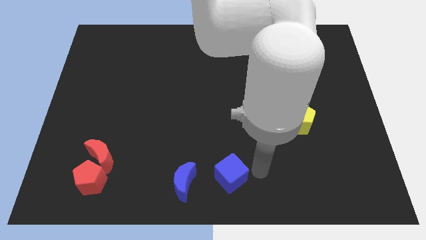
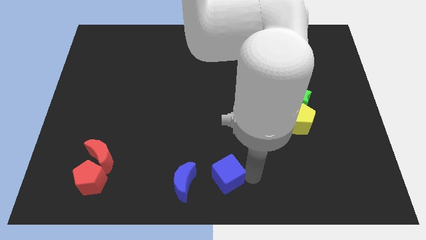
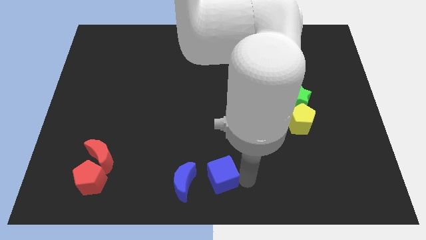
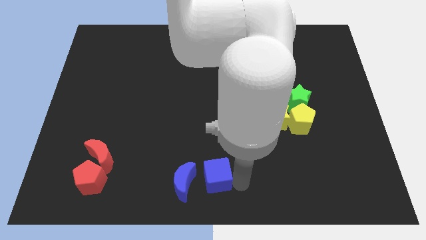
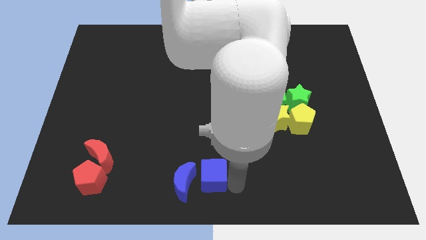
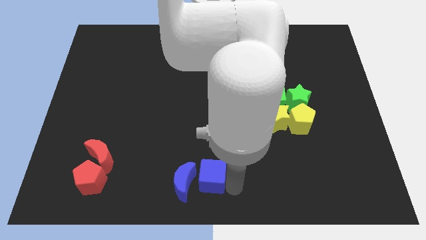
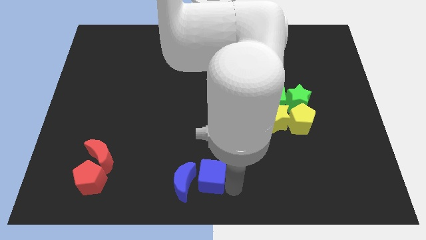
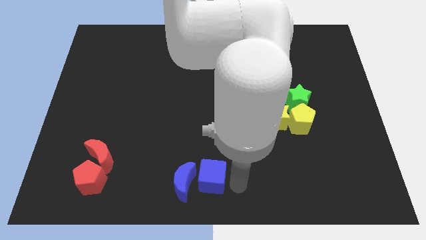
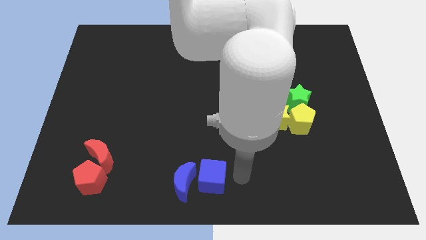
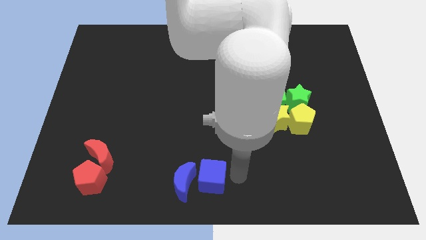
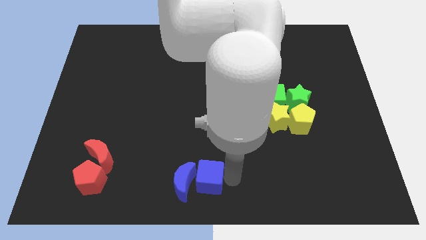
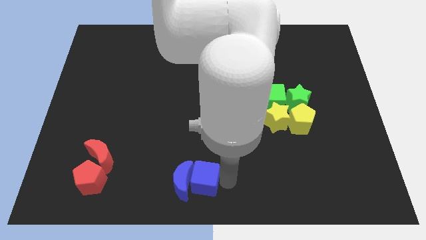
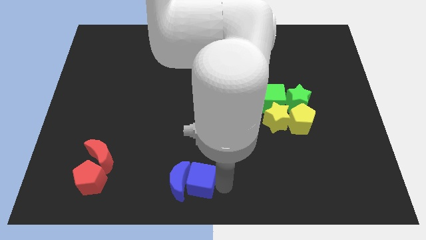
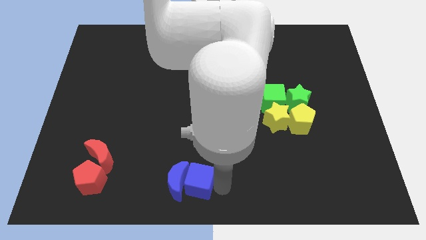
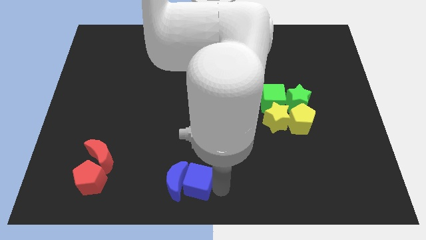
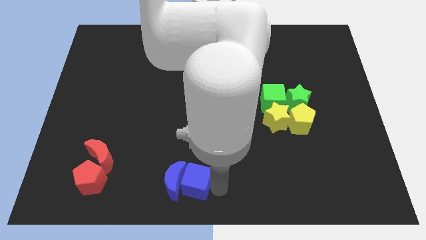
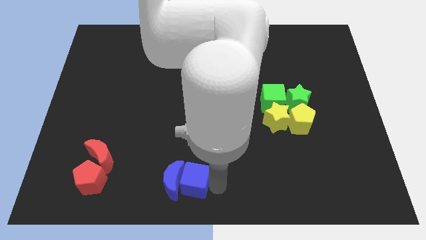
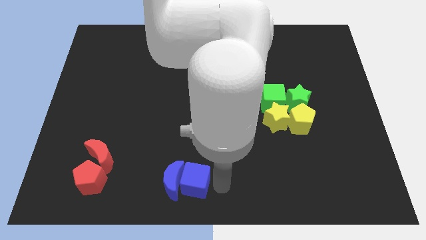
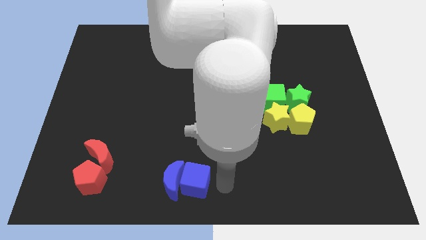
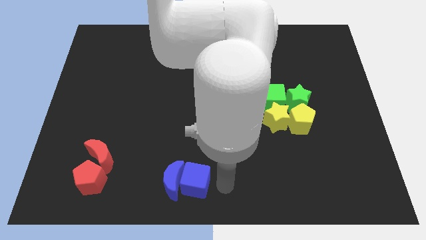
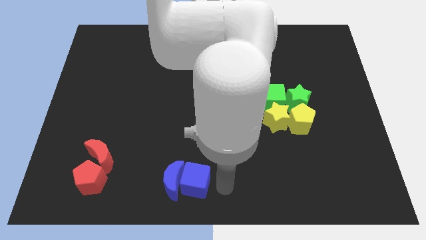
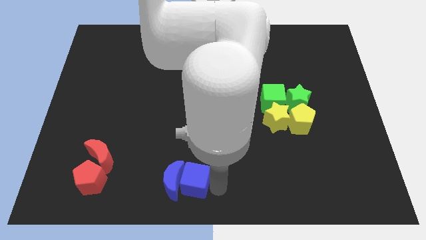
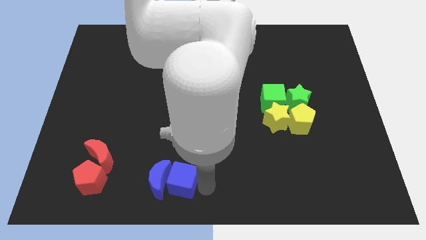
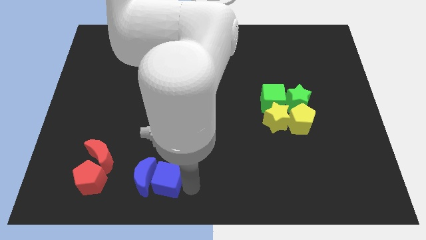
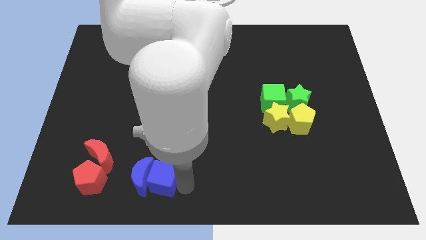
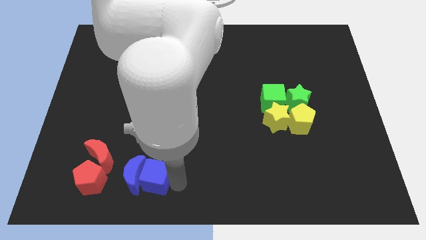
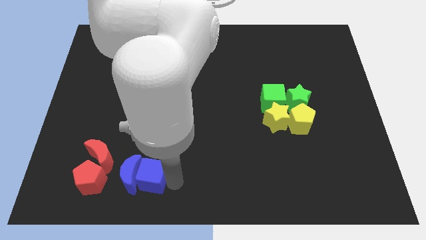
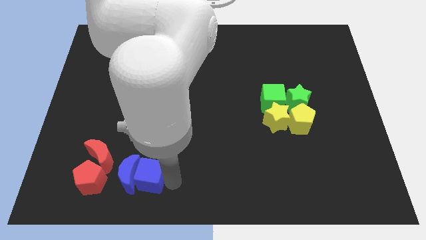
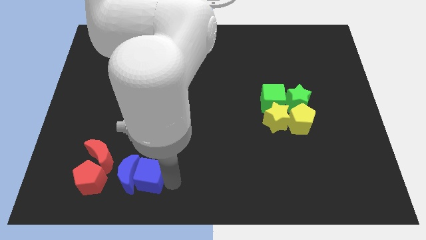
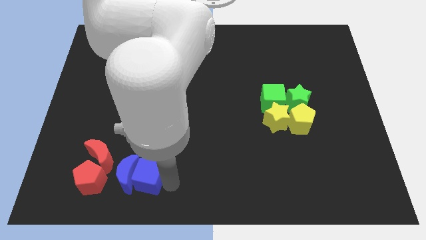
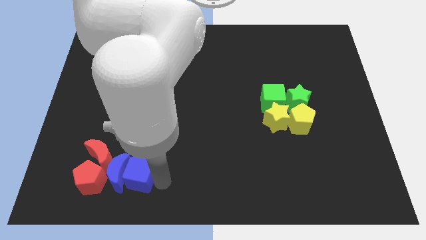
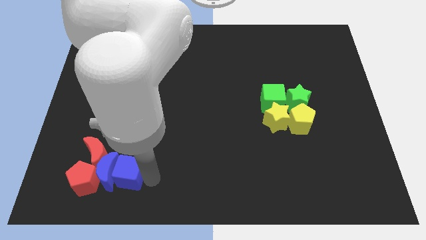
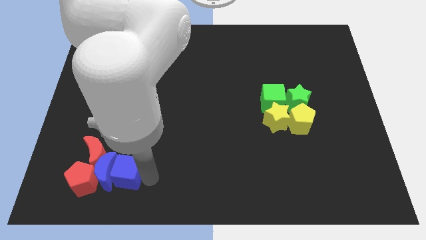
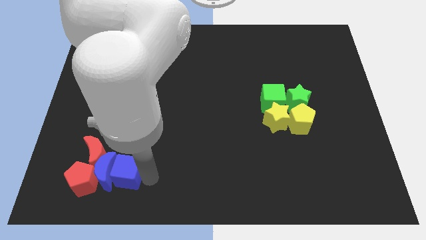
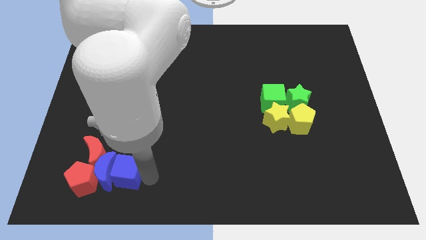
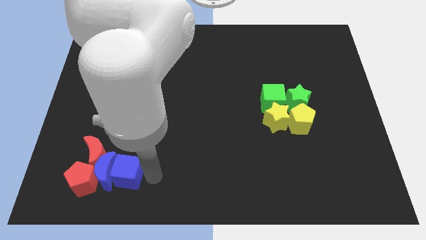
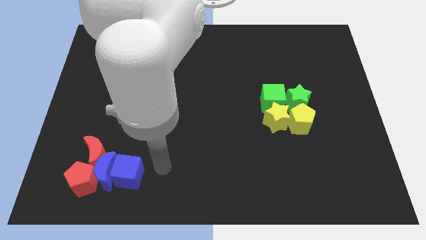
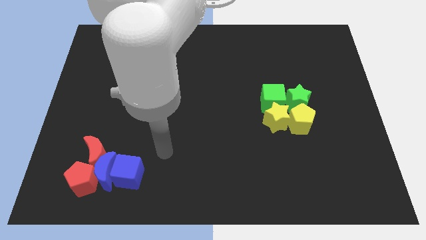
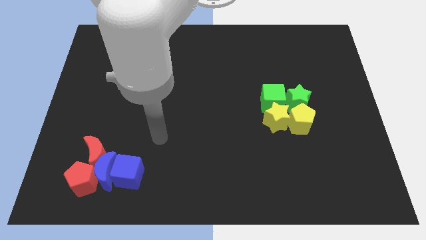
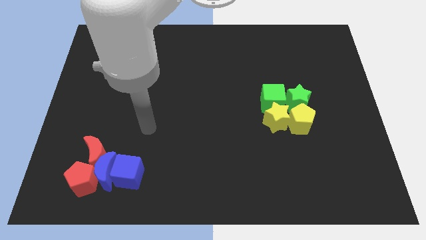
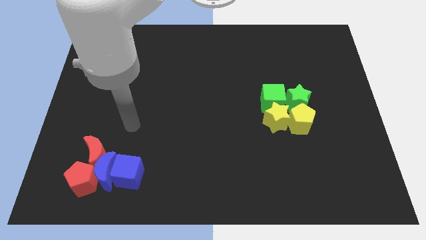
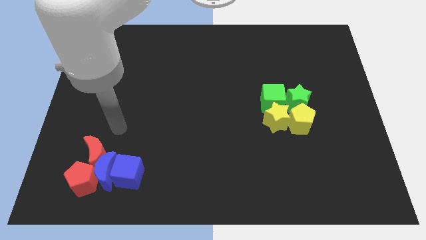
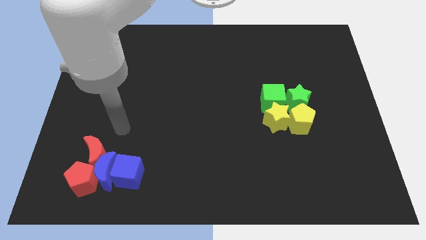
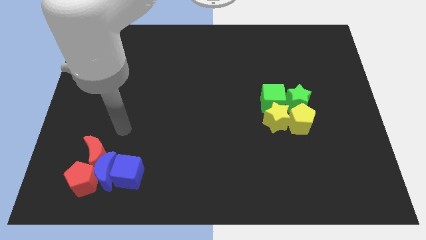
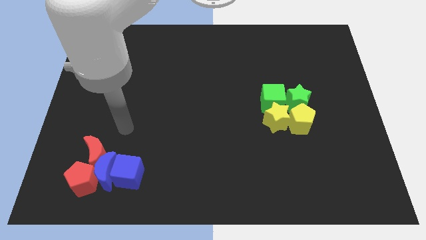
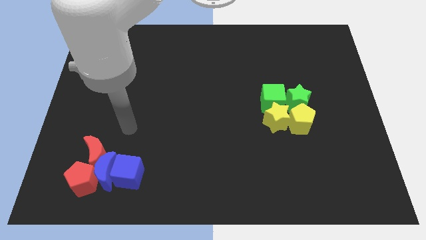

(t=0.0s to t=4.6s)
move the blue cube to the right side of the blue crescent

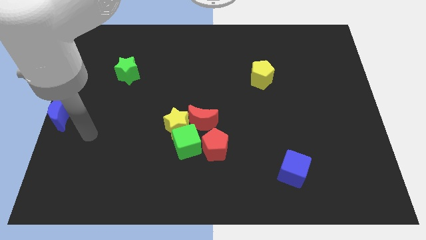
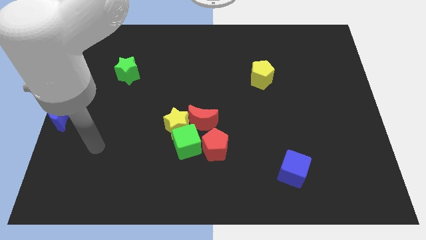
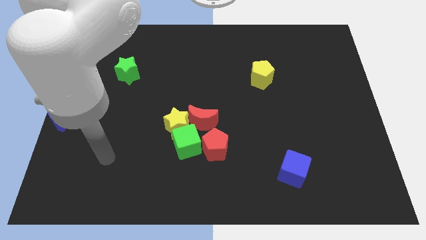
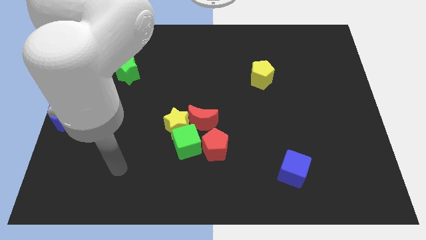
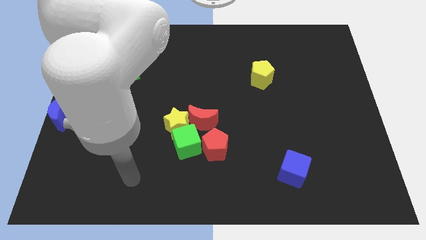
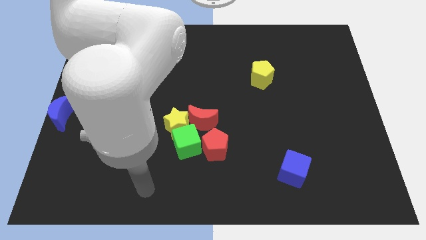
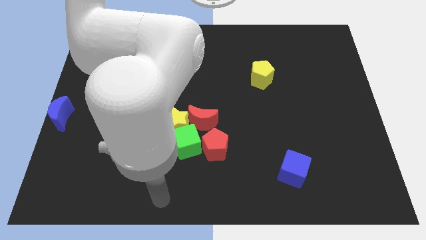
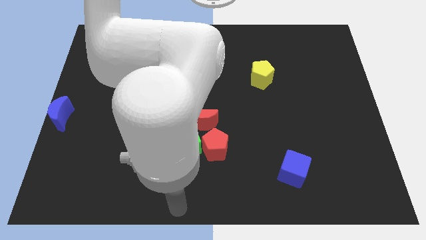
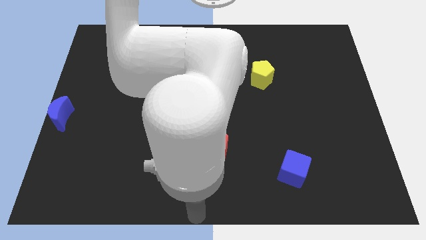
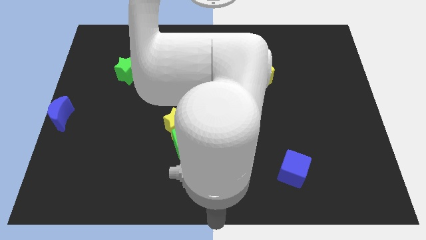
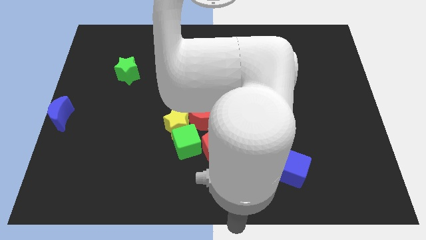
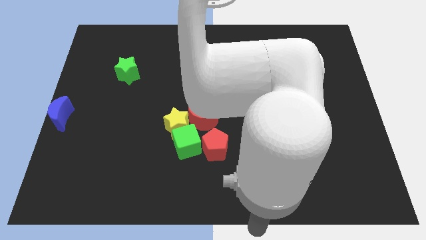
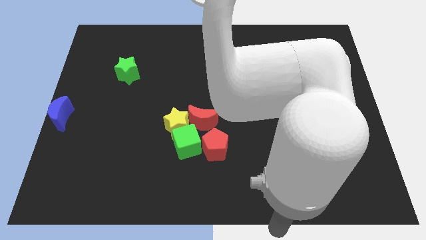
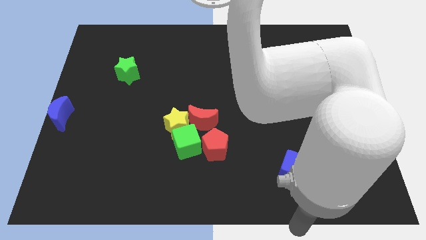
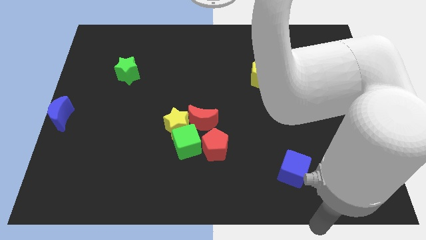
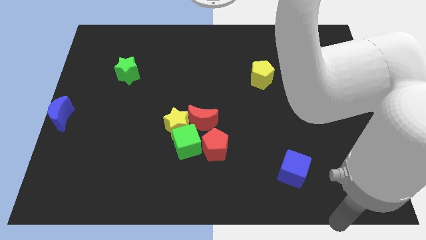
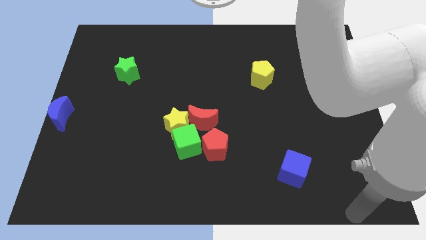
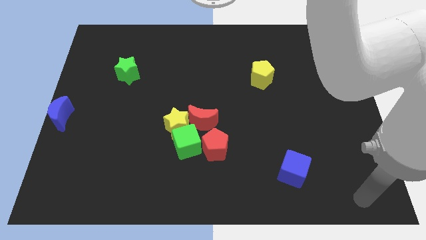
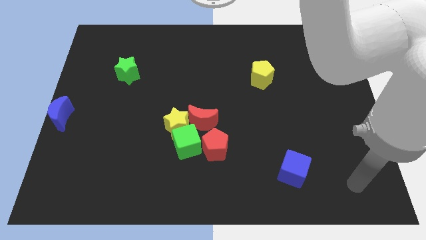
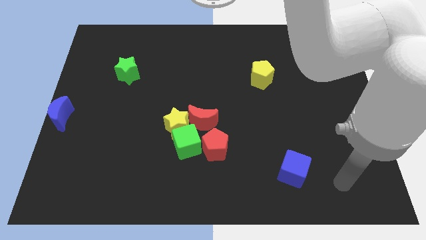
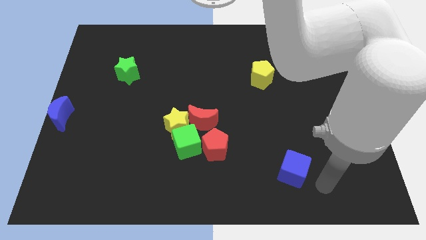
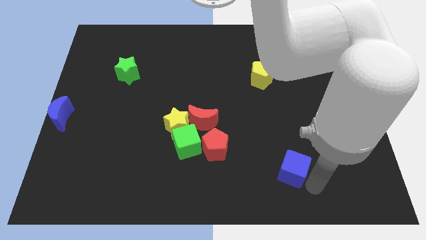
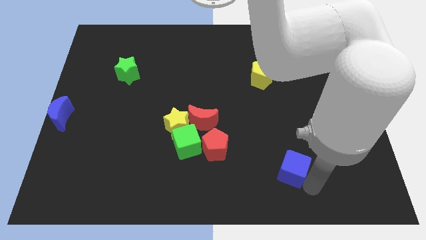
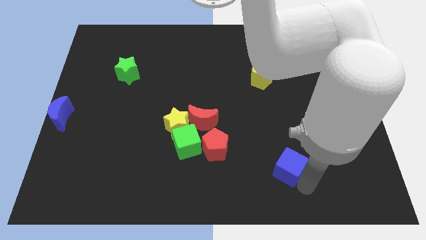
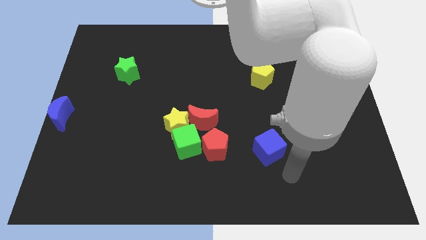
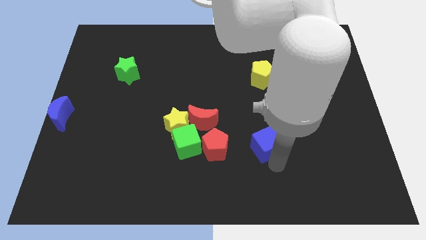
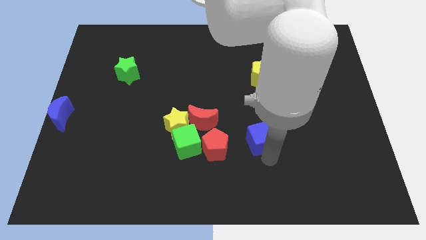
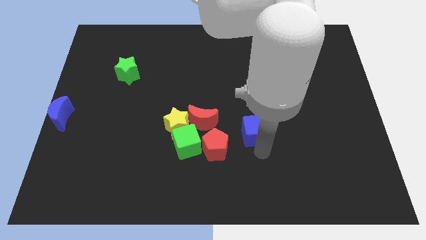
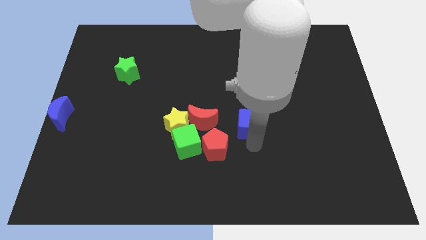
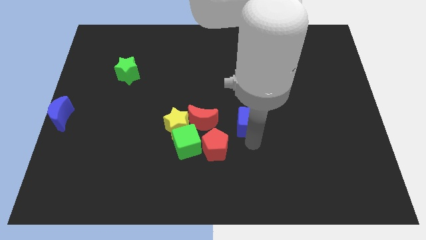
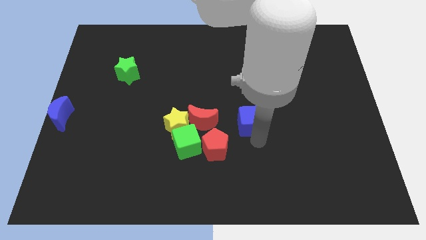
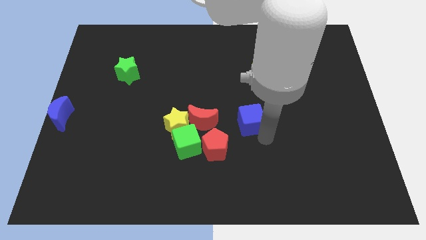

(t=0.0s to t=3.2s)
place blue cube to the right of red moon

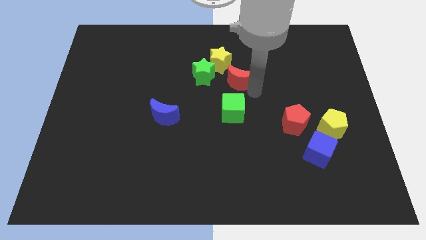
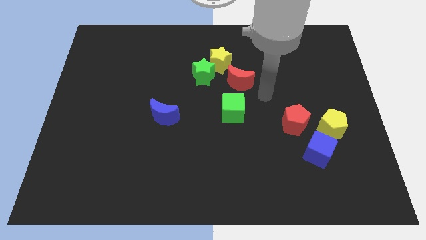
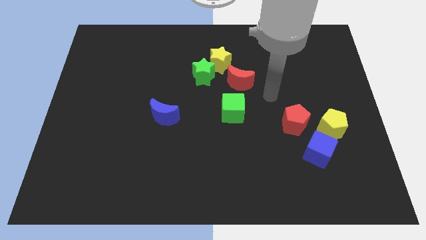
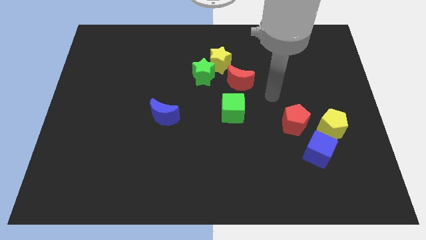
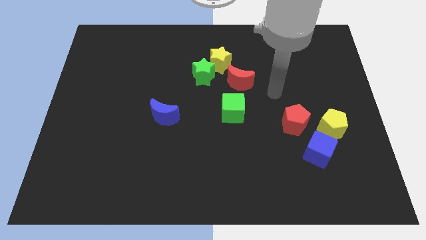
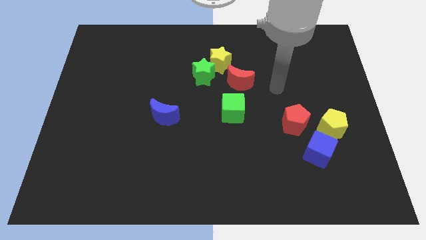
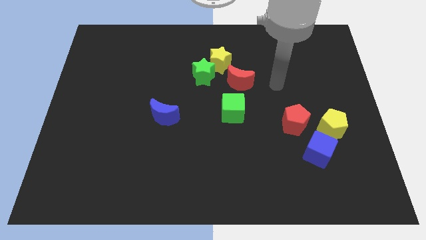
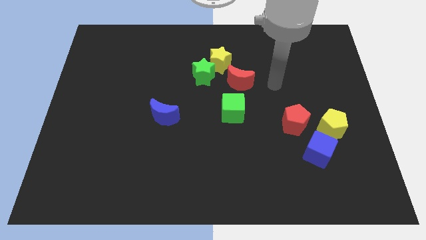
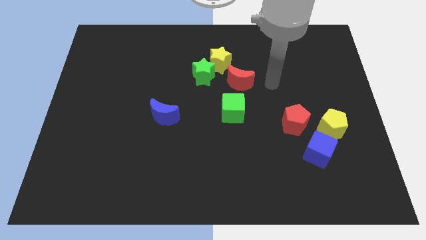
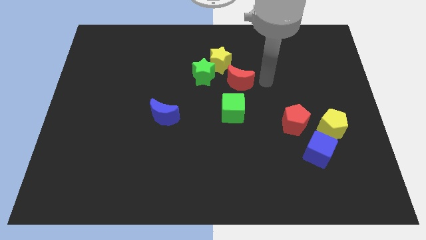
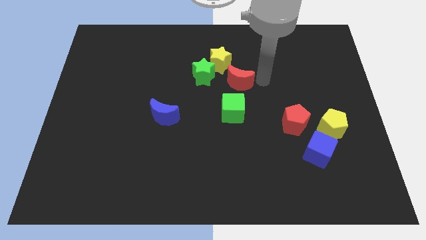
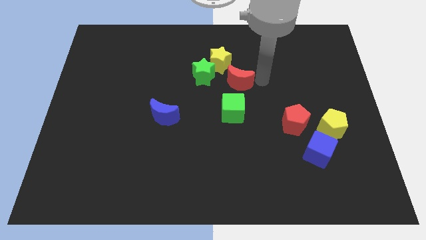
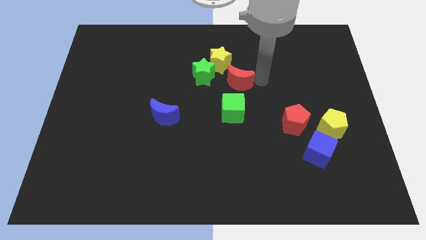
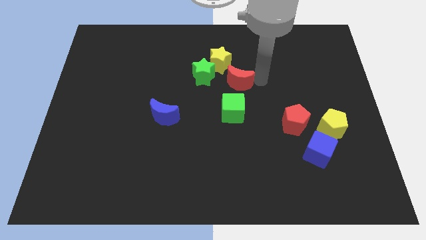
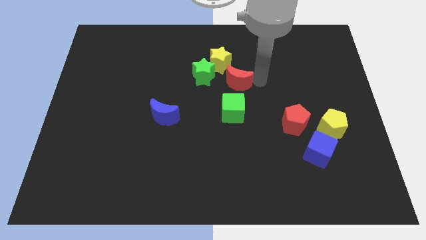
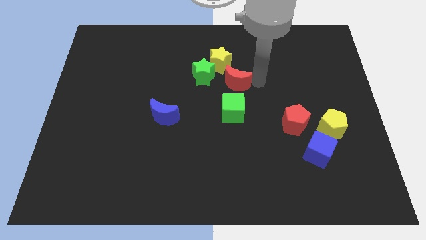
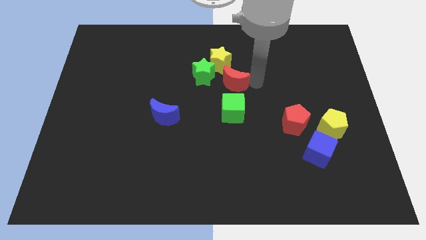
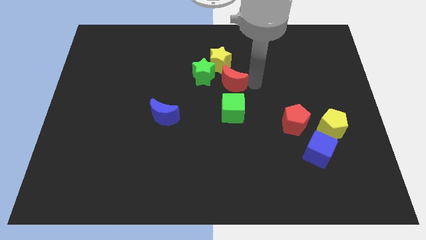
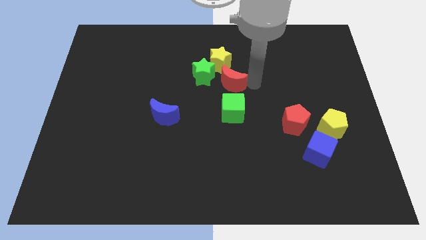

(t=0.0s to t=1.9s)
place the red crescent in between yellow star and green cube
